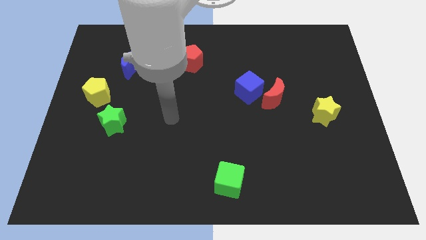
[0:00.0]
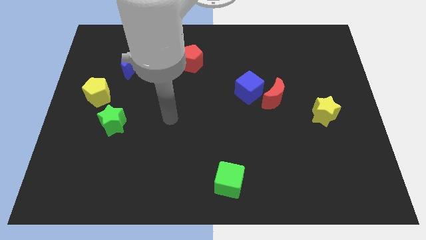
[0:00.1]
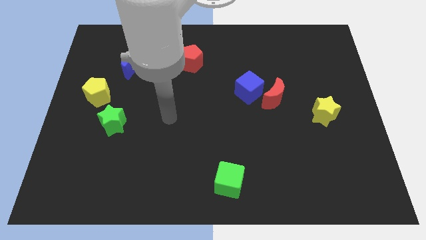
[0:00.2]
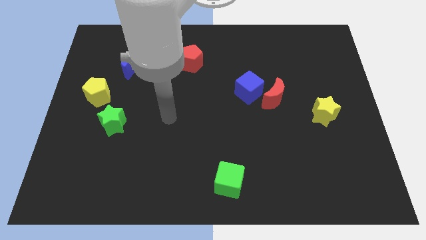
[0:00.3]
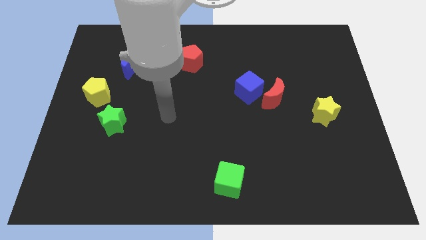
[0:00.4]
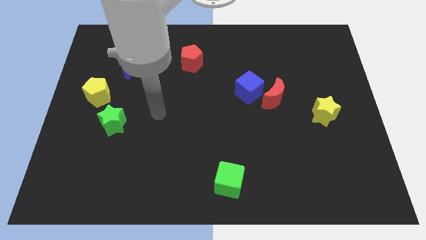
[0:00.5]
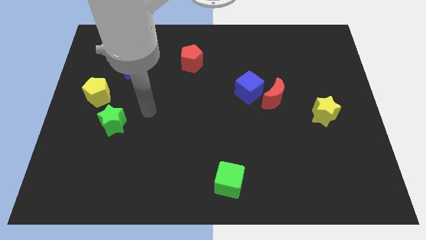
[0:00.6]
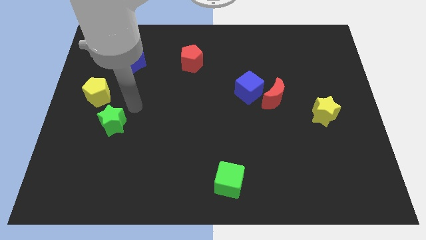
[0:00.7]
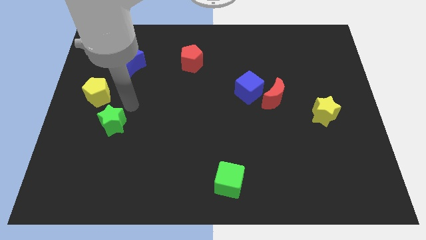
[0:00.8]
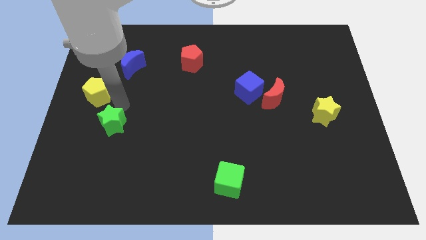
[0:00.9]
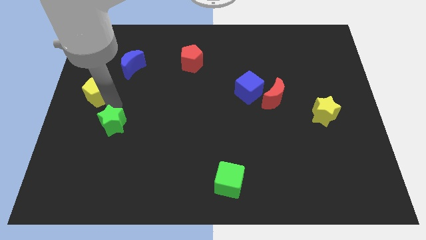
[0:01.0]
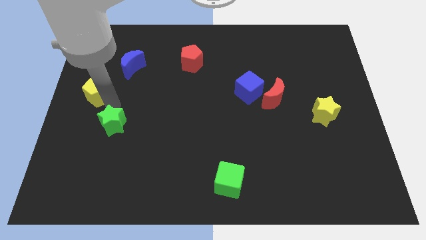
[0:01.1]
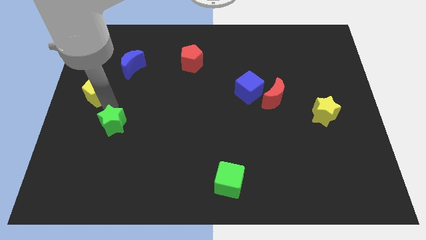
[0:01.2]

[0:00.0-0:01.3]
move the arm above the green star

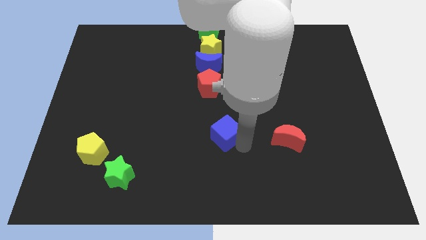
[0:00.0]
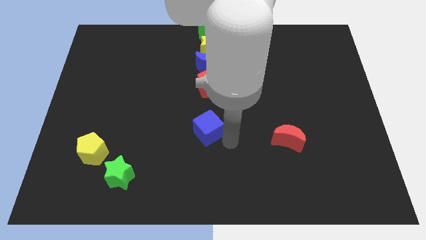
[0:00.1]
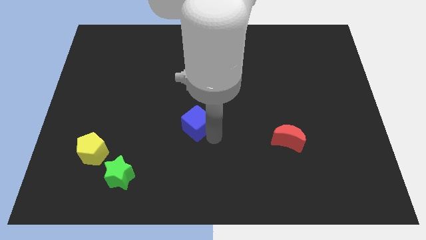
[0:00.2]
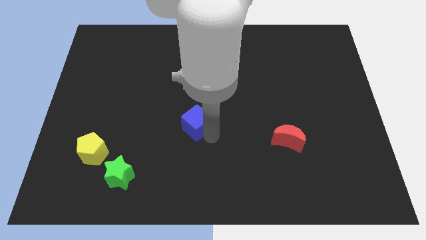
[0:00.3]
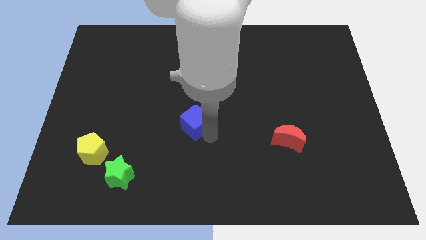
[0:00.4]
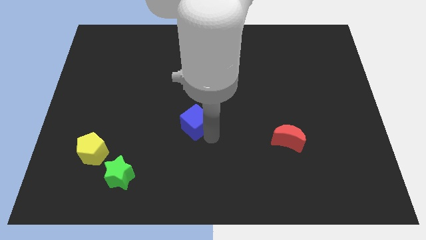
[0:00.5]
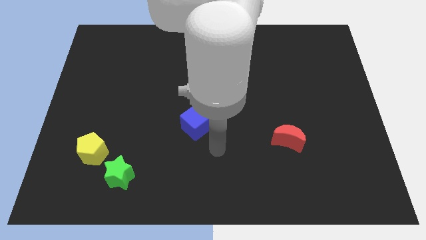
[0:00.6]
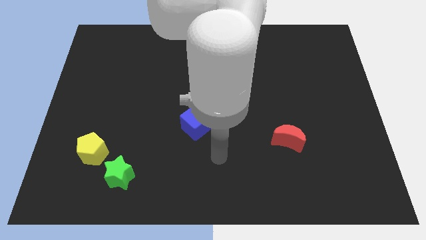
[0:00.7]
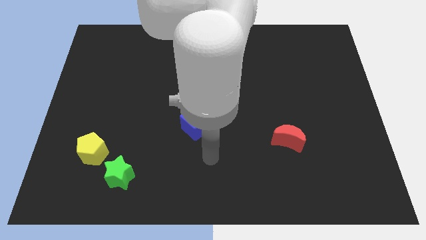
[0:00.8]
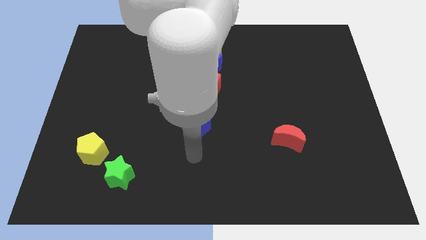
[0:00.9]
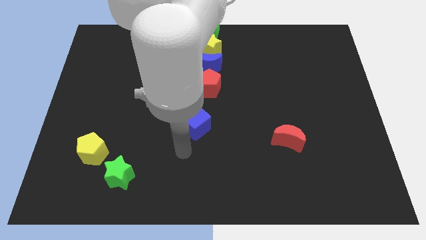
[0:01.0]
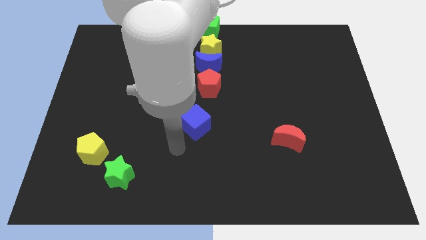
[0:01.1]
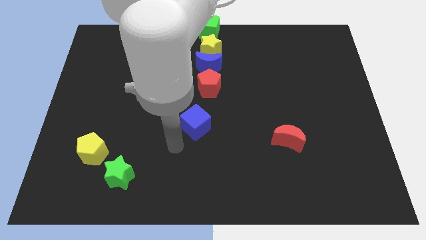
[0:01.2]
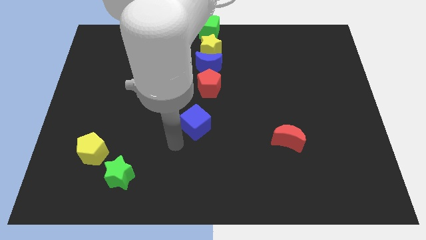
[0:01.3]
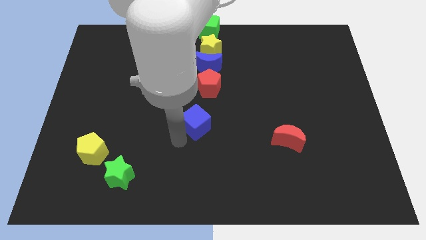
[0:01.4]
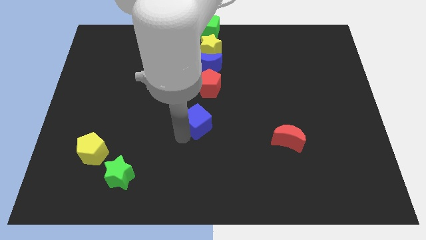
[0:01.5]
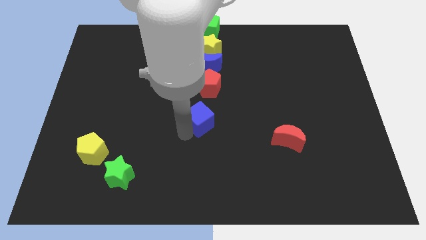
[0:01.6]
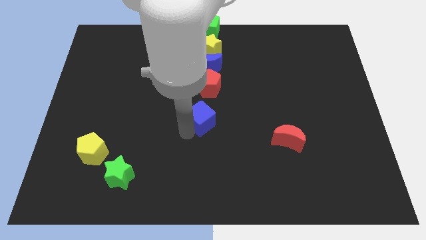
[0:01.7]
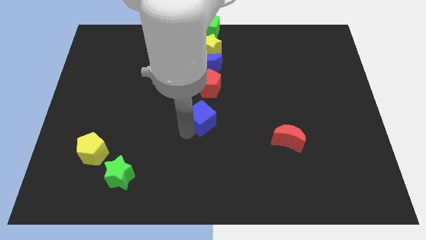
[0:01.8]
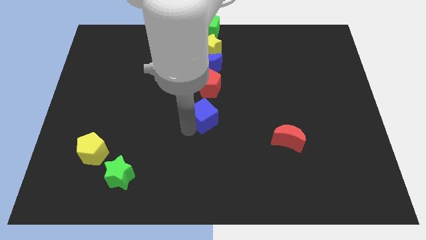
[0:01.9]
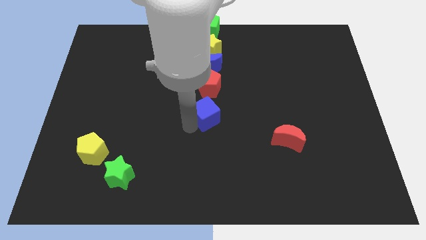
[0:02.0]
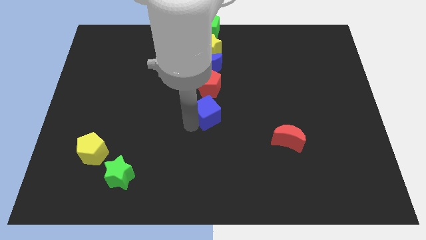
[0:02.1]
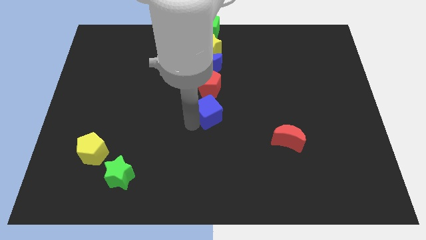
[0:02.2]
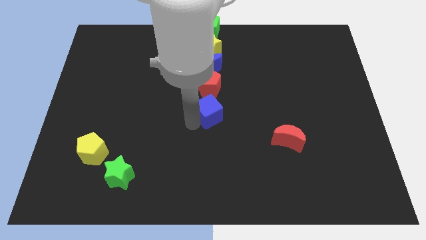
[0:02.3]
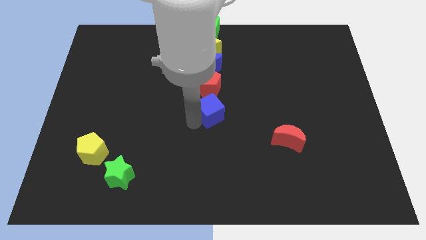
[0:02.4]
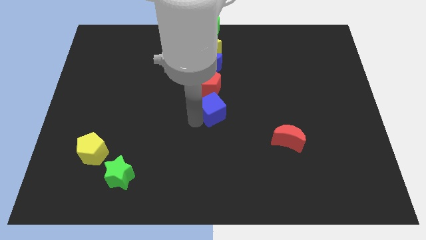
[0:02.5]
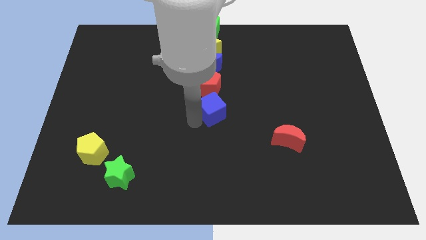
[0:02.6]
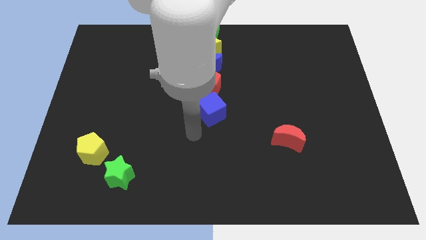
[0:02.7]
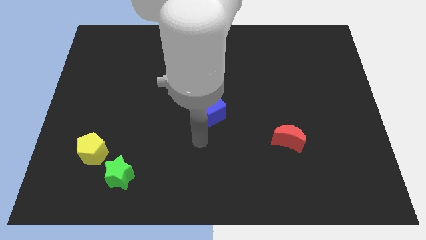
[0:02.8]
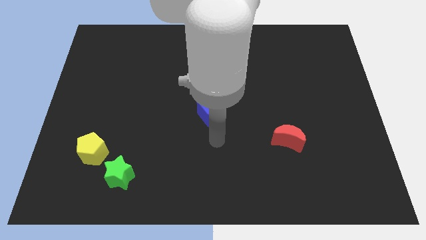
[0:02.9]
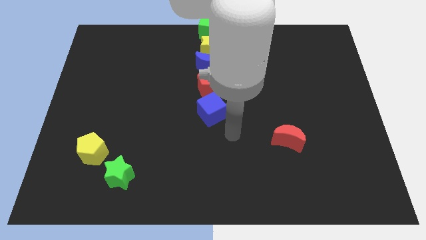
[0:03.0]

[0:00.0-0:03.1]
place the blue cube at the bottom of red pentagon

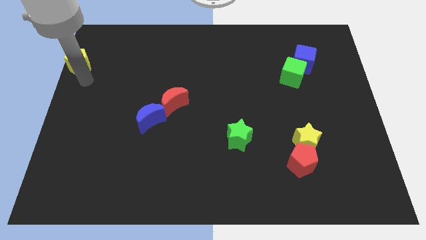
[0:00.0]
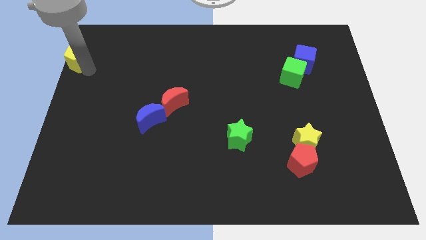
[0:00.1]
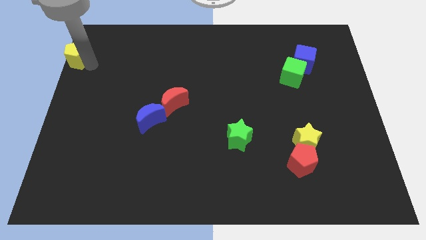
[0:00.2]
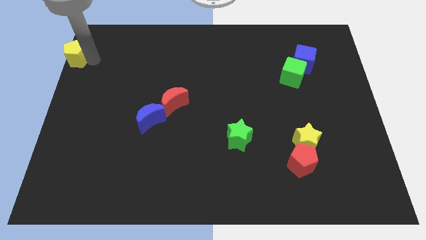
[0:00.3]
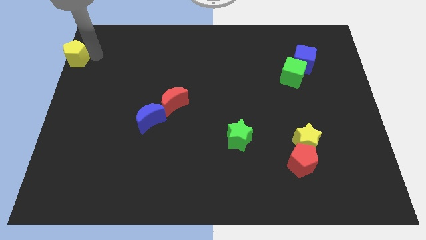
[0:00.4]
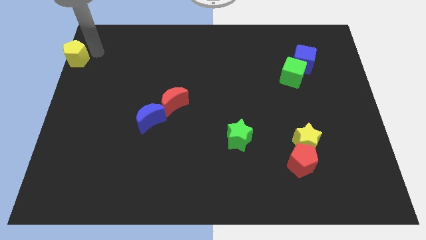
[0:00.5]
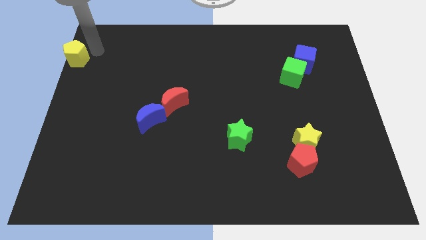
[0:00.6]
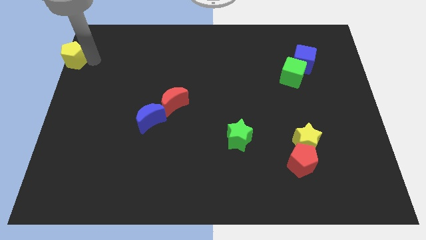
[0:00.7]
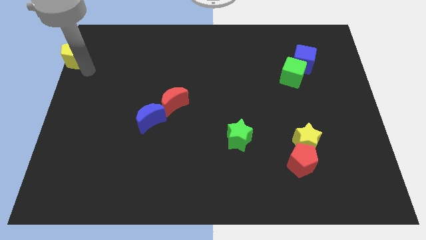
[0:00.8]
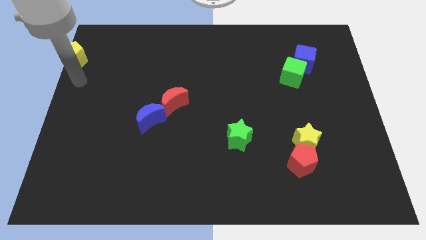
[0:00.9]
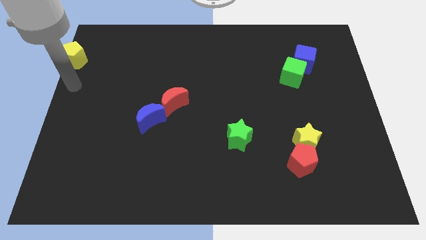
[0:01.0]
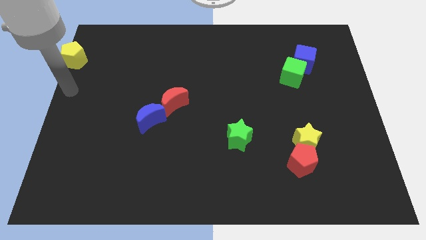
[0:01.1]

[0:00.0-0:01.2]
push yellow pentagon slightly upwards

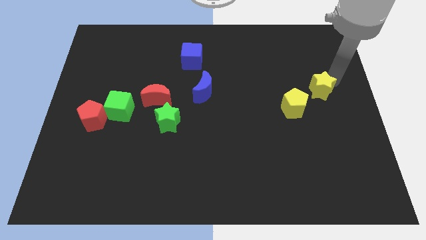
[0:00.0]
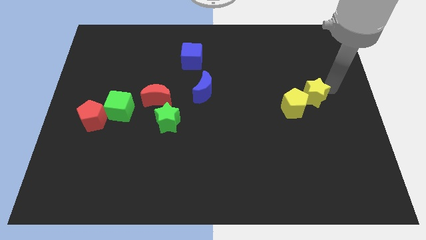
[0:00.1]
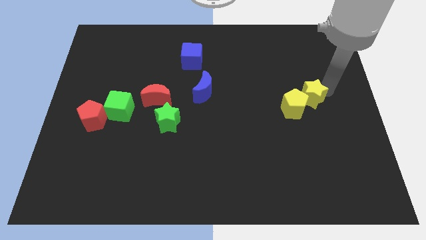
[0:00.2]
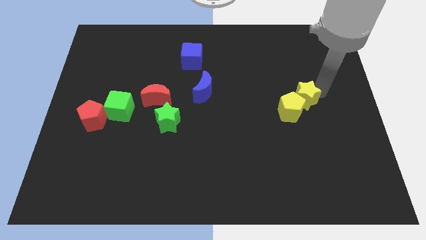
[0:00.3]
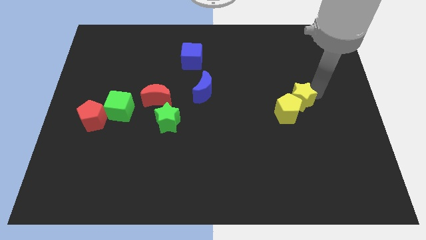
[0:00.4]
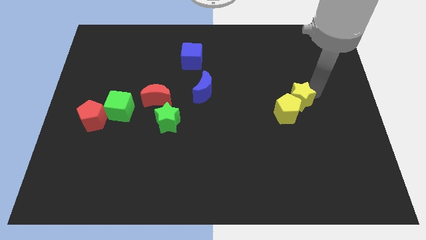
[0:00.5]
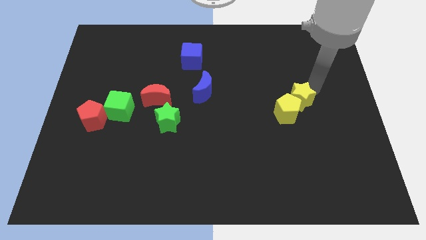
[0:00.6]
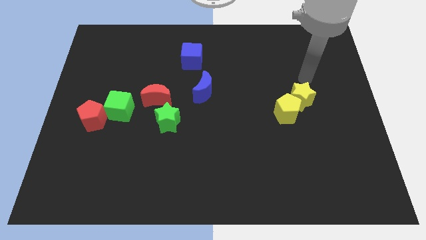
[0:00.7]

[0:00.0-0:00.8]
move yellow star into yellow pentagon

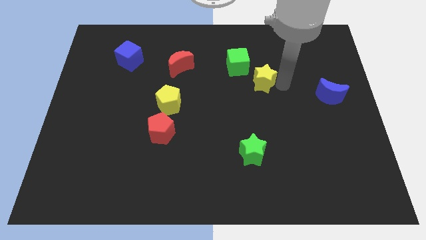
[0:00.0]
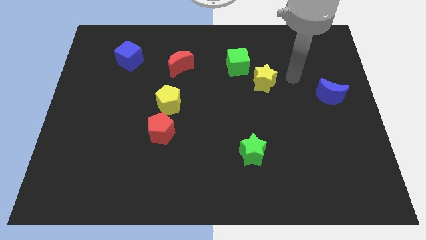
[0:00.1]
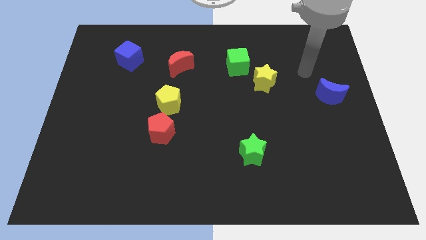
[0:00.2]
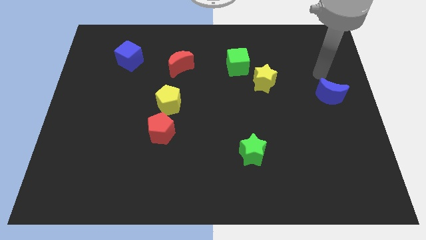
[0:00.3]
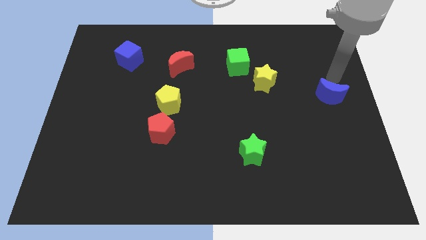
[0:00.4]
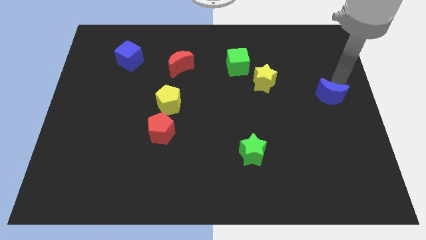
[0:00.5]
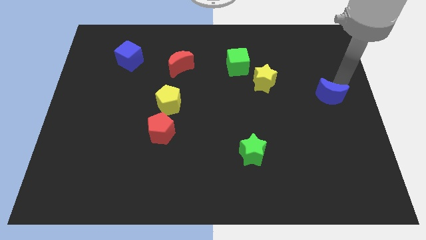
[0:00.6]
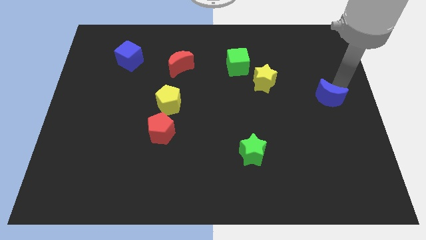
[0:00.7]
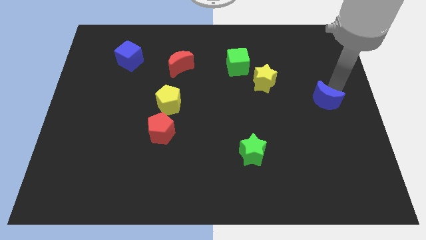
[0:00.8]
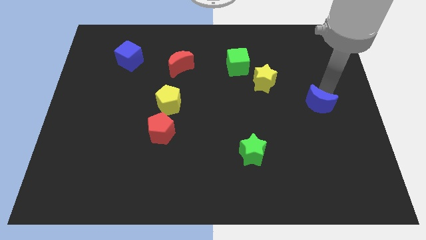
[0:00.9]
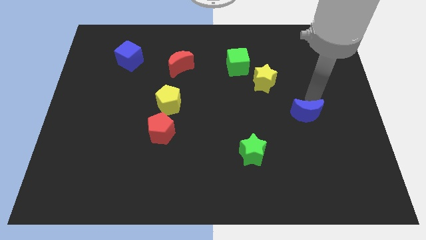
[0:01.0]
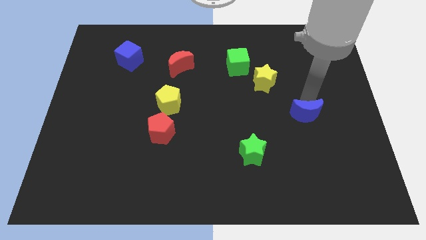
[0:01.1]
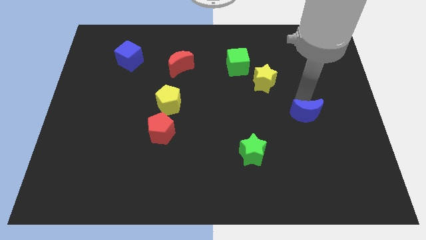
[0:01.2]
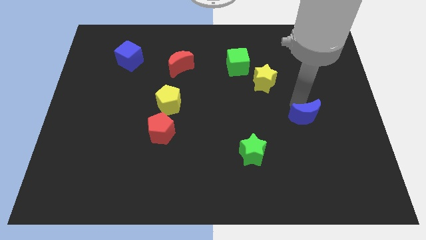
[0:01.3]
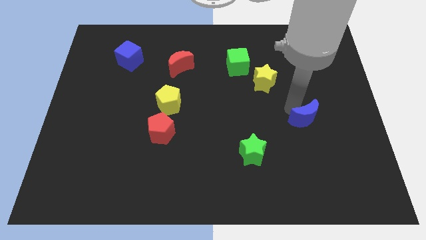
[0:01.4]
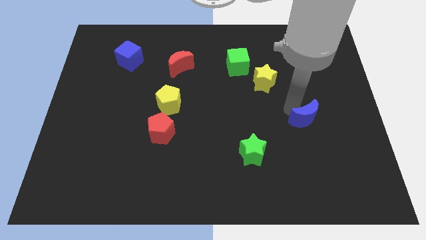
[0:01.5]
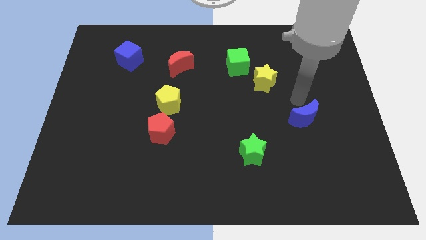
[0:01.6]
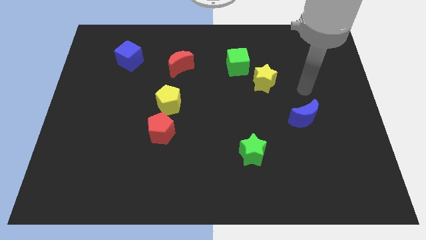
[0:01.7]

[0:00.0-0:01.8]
move the blue crescent towards the green star

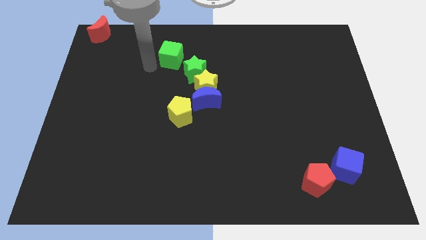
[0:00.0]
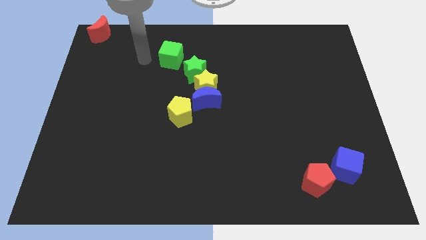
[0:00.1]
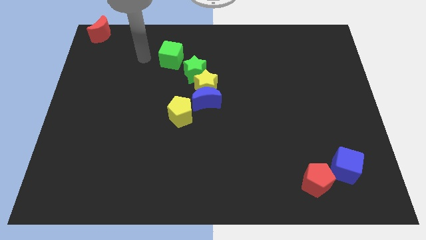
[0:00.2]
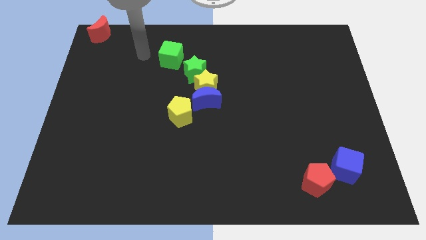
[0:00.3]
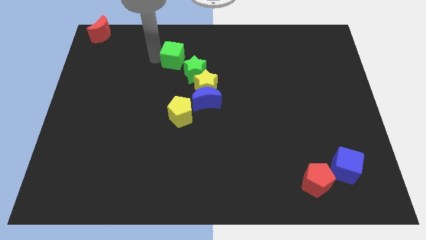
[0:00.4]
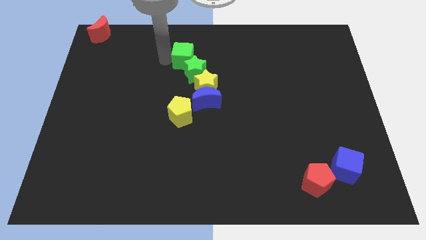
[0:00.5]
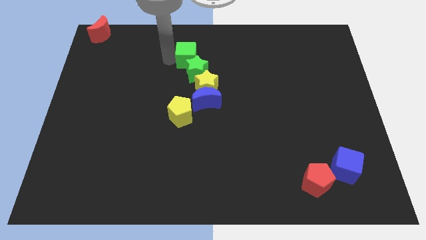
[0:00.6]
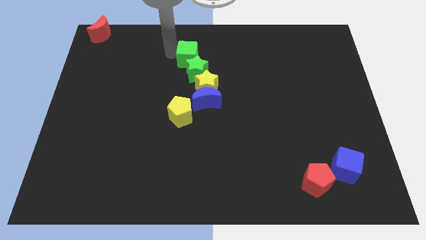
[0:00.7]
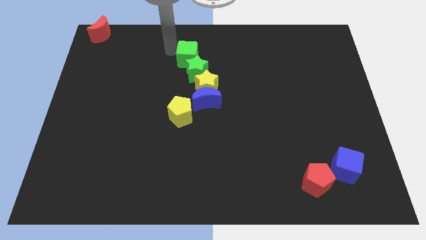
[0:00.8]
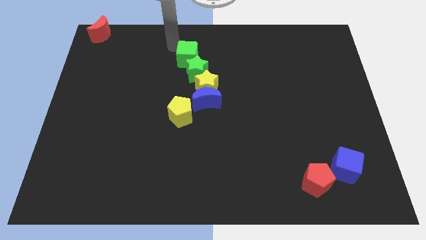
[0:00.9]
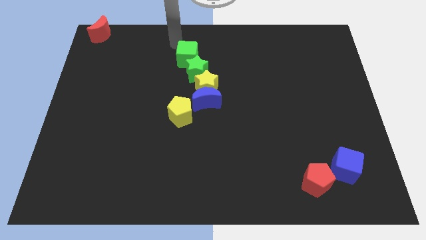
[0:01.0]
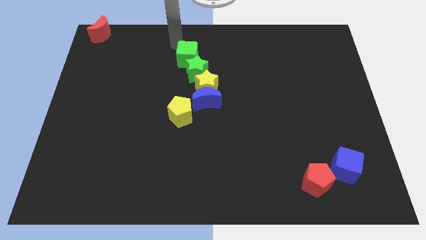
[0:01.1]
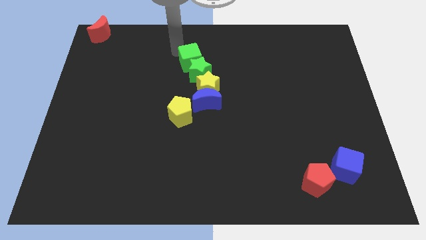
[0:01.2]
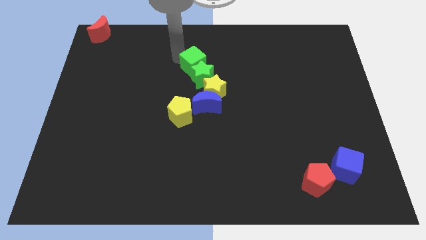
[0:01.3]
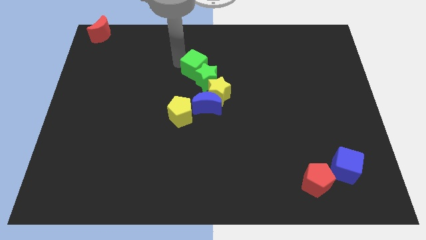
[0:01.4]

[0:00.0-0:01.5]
push the green cube into the green star
